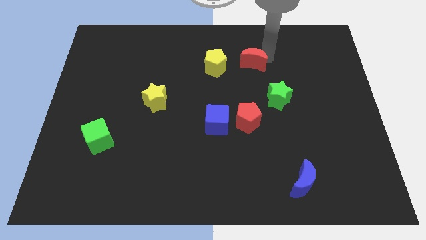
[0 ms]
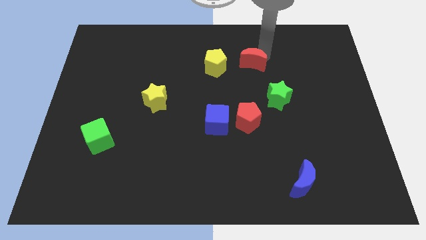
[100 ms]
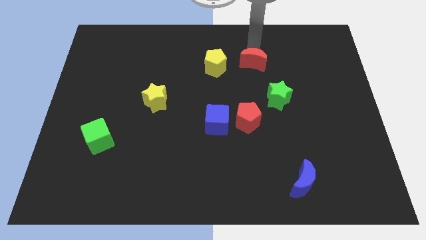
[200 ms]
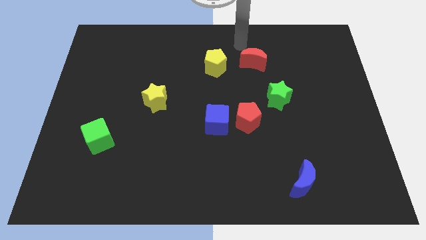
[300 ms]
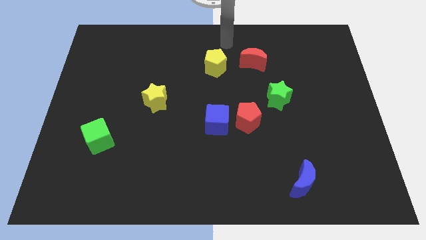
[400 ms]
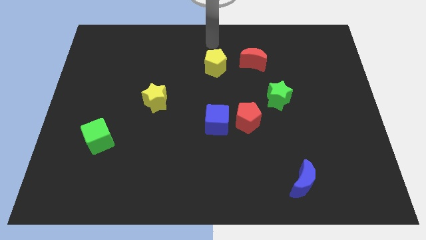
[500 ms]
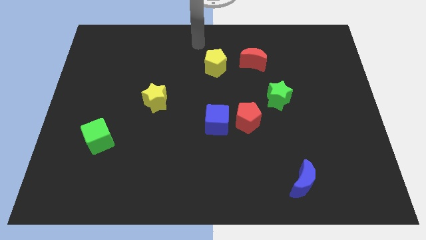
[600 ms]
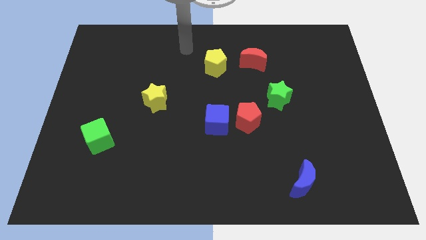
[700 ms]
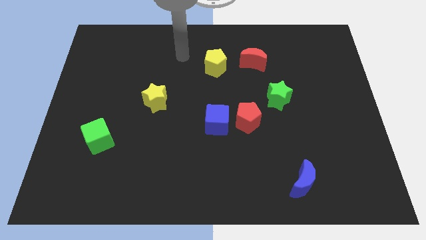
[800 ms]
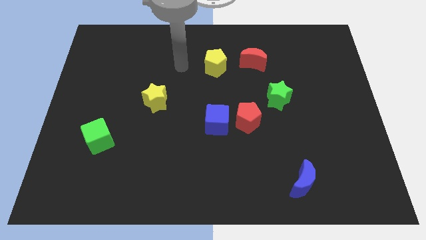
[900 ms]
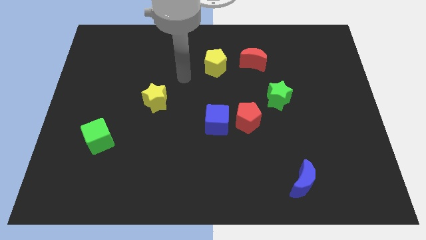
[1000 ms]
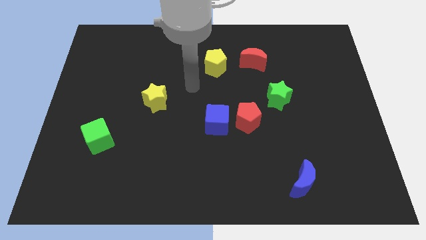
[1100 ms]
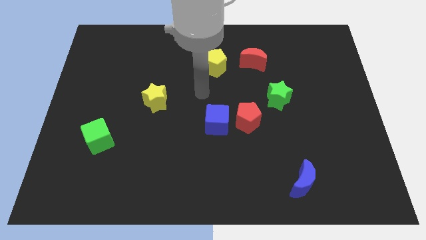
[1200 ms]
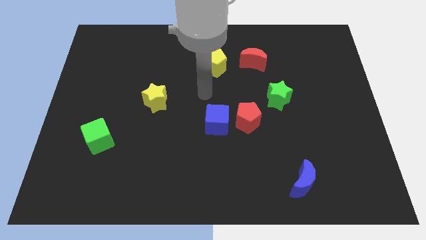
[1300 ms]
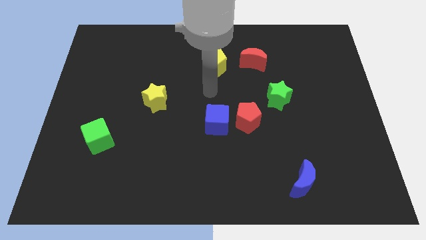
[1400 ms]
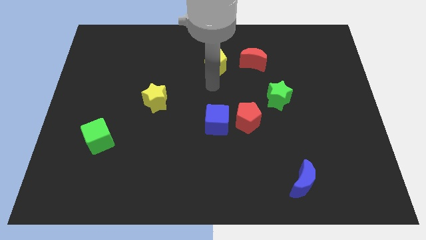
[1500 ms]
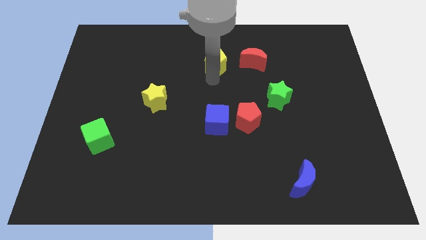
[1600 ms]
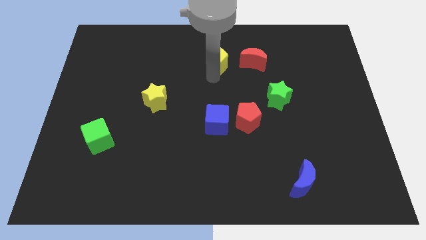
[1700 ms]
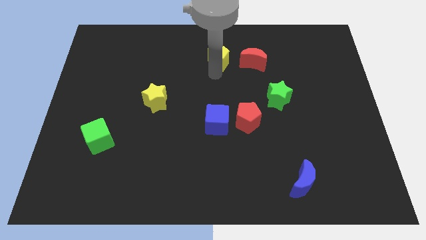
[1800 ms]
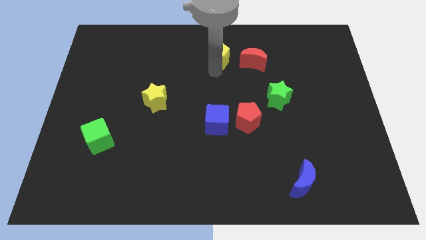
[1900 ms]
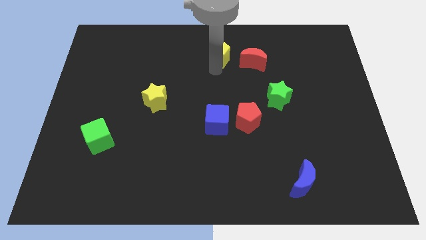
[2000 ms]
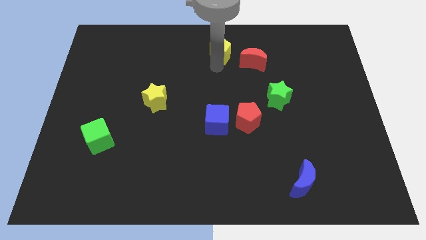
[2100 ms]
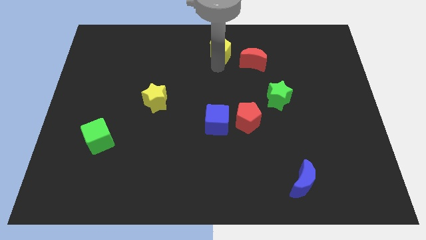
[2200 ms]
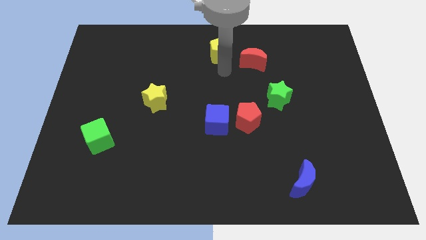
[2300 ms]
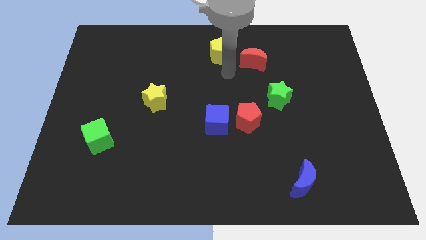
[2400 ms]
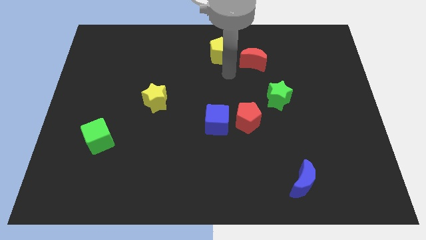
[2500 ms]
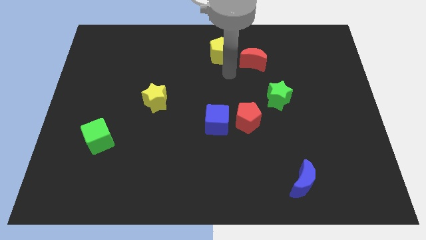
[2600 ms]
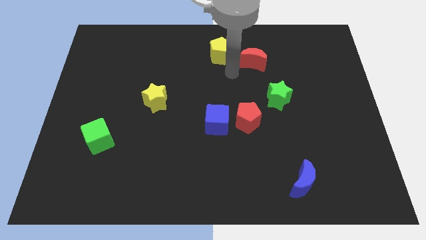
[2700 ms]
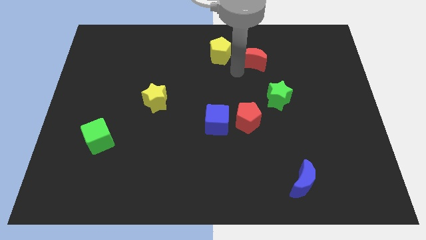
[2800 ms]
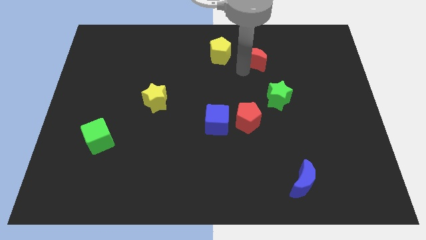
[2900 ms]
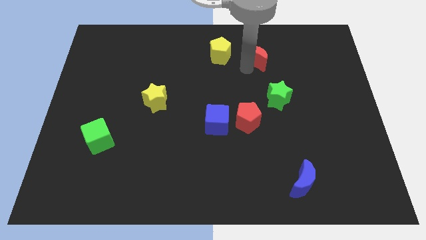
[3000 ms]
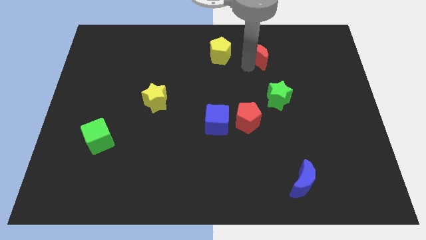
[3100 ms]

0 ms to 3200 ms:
move the yellow pentagon slightly upwards

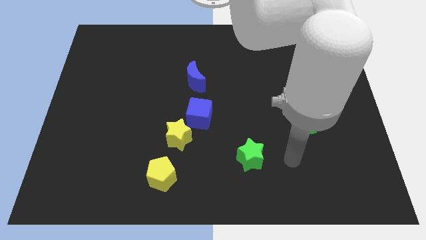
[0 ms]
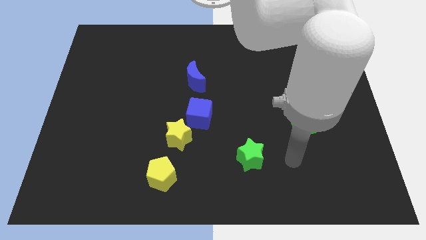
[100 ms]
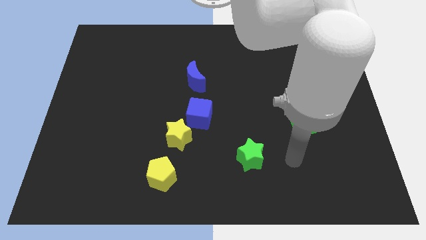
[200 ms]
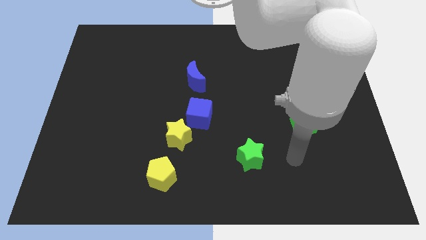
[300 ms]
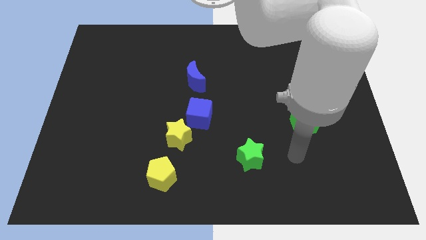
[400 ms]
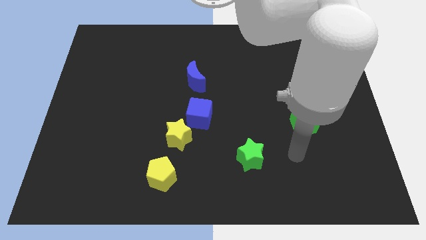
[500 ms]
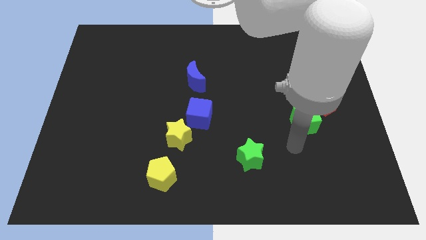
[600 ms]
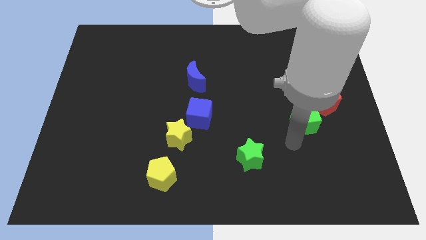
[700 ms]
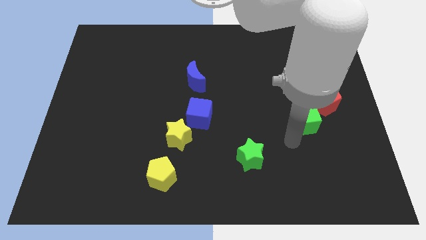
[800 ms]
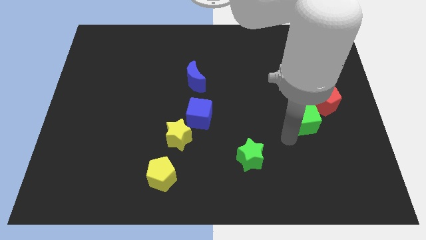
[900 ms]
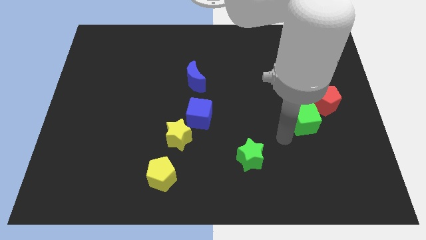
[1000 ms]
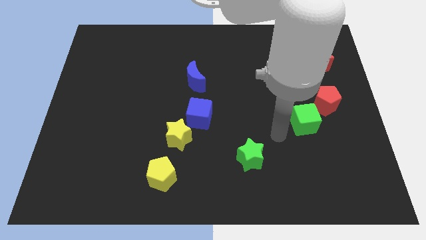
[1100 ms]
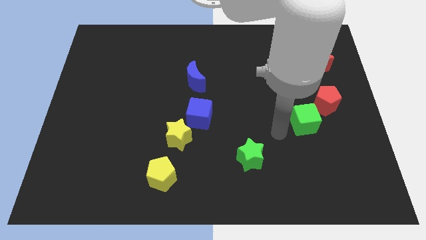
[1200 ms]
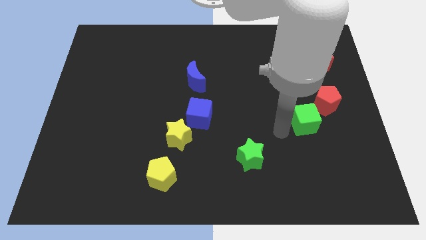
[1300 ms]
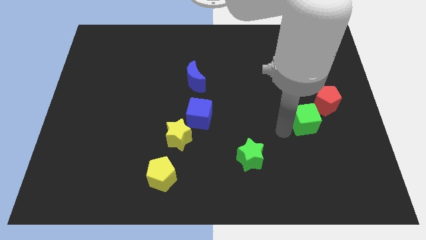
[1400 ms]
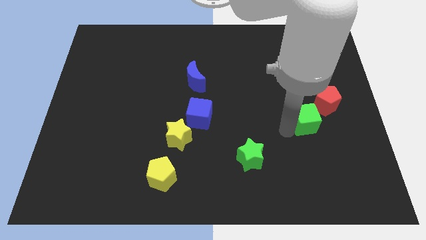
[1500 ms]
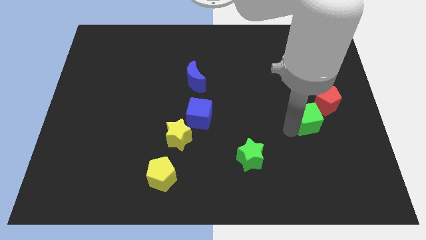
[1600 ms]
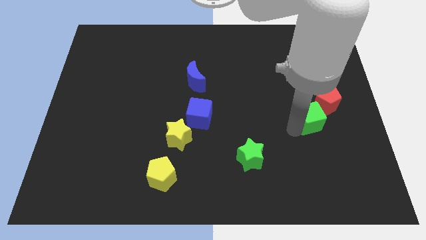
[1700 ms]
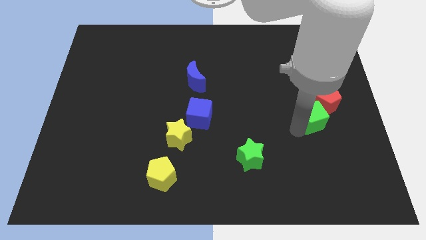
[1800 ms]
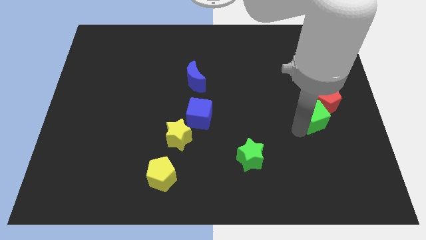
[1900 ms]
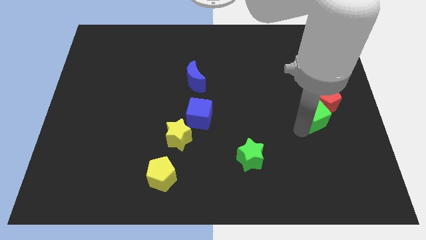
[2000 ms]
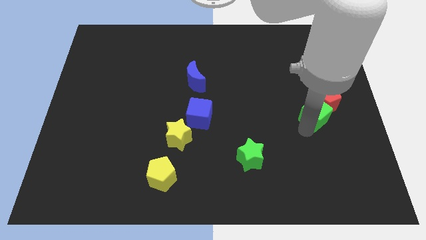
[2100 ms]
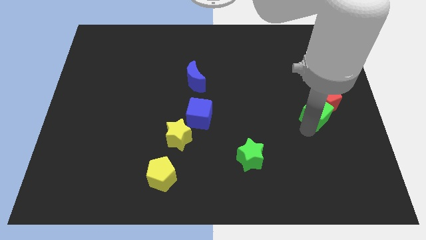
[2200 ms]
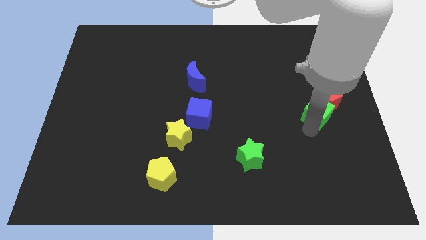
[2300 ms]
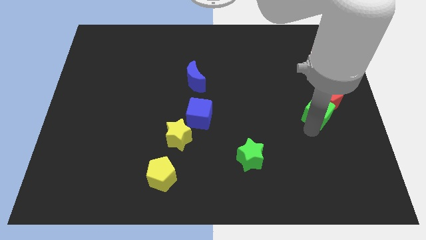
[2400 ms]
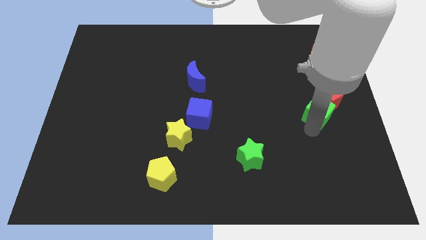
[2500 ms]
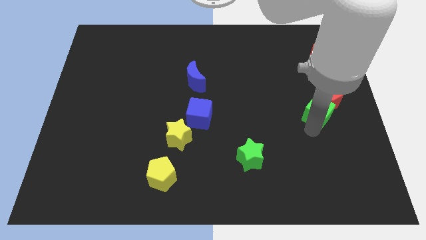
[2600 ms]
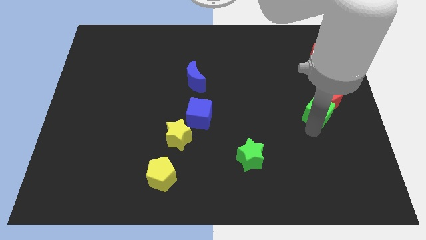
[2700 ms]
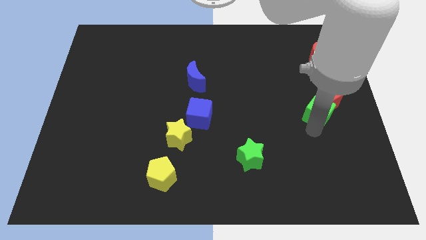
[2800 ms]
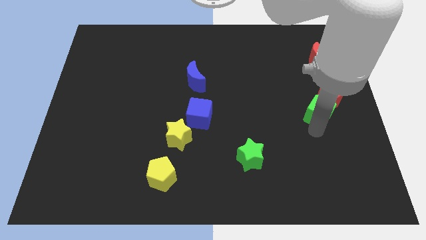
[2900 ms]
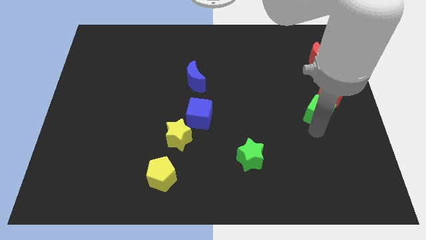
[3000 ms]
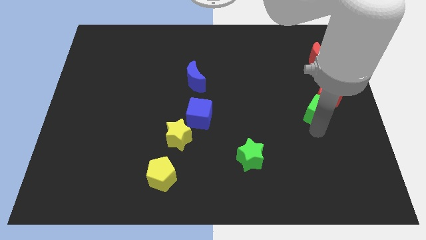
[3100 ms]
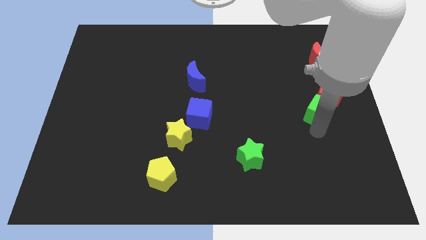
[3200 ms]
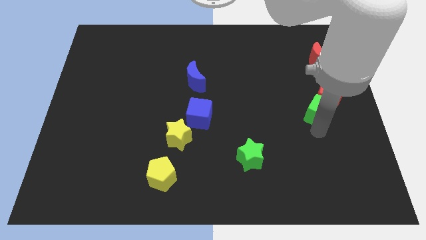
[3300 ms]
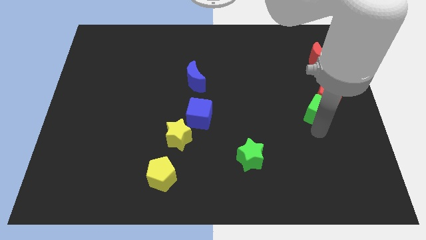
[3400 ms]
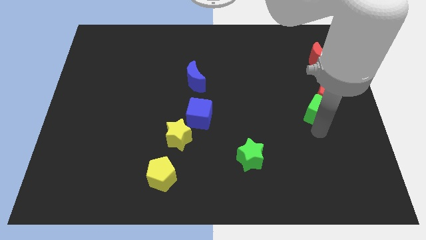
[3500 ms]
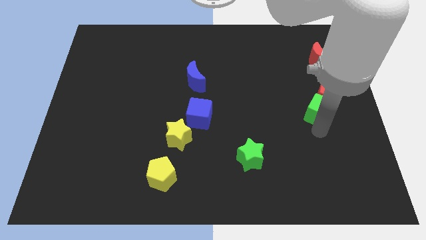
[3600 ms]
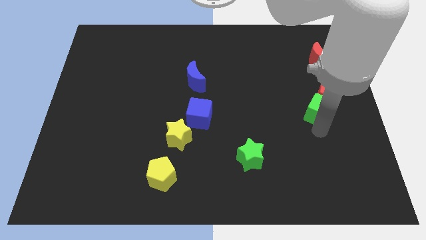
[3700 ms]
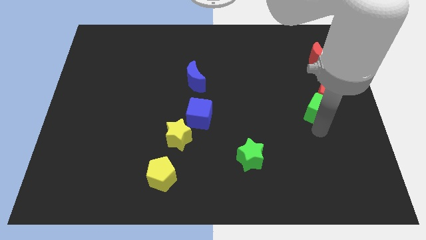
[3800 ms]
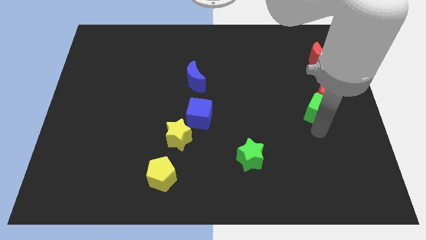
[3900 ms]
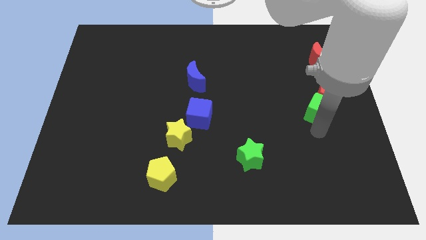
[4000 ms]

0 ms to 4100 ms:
push the green cube into the red pentagon

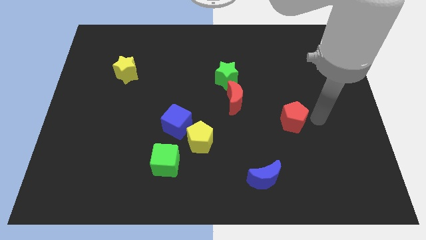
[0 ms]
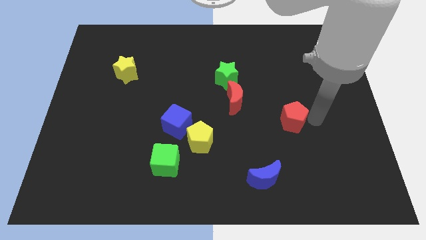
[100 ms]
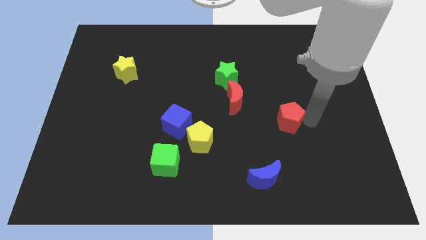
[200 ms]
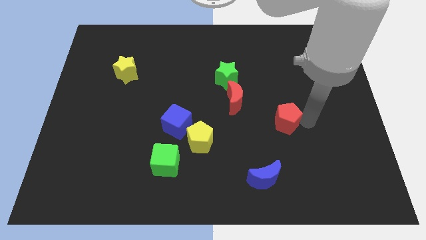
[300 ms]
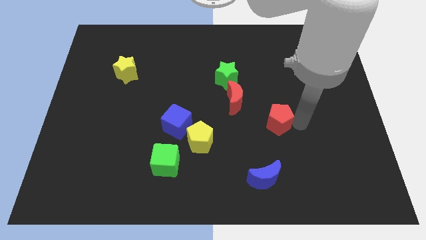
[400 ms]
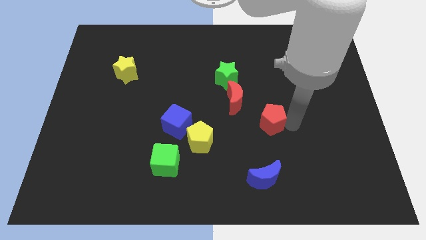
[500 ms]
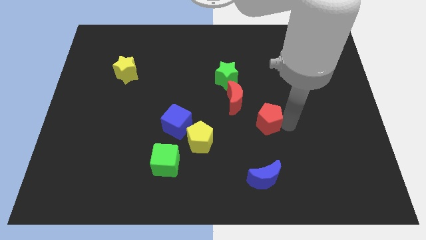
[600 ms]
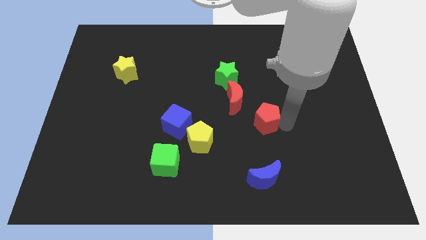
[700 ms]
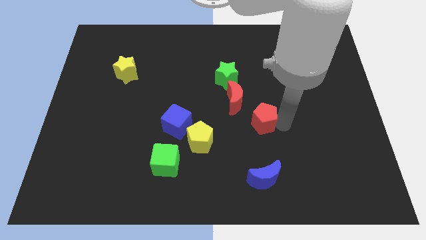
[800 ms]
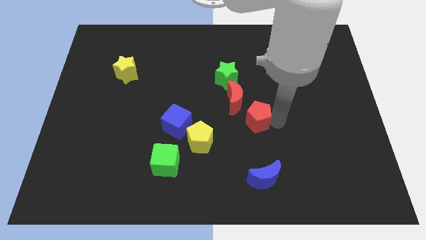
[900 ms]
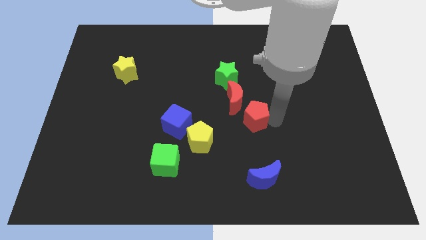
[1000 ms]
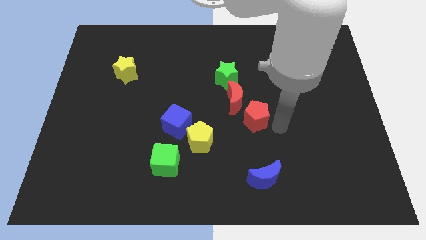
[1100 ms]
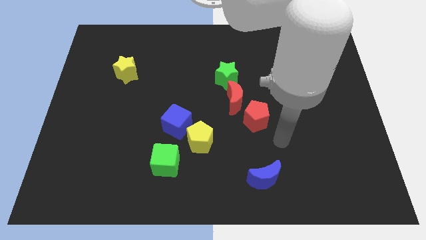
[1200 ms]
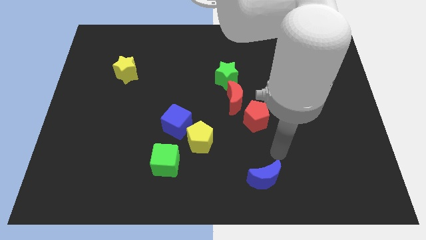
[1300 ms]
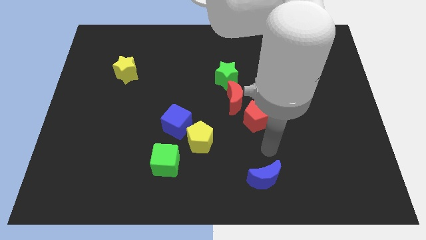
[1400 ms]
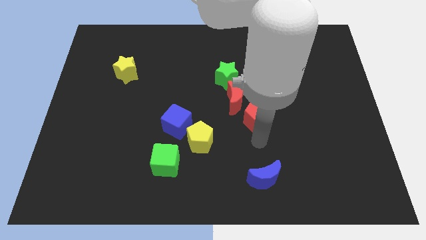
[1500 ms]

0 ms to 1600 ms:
place red pentagon to the bottom right of red moon

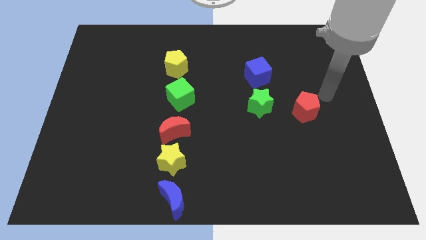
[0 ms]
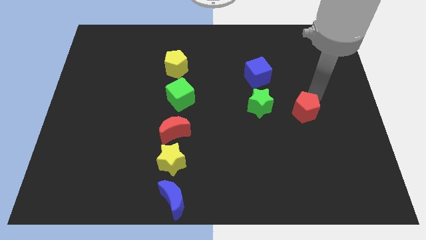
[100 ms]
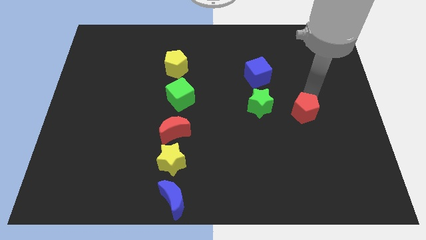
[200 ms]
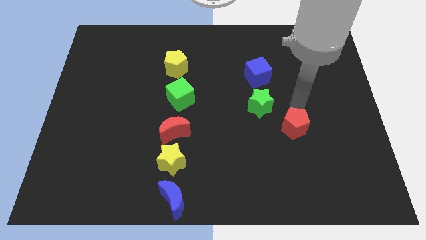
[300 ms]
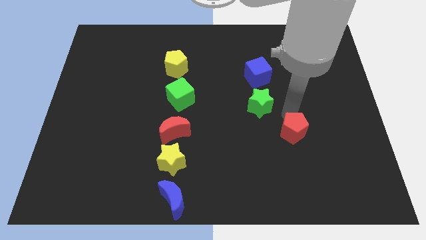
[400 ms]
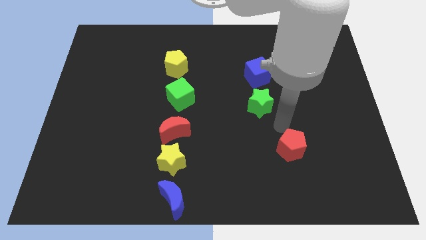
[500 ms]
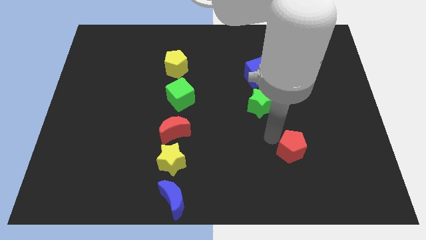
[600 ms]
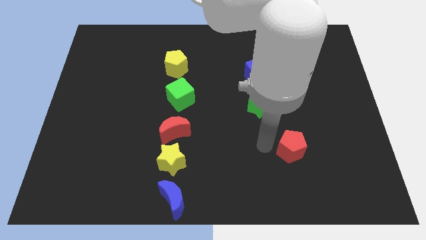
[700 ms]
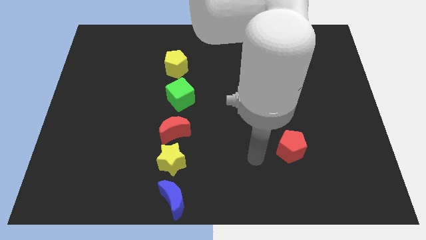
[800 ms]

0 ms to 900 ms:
place red pentagon to the bottom right of green star
